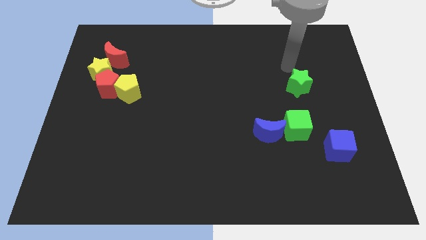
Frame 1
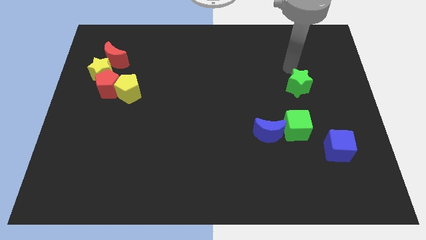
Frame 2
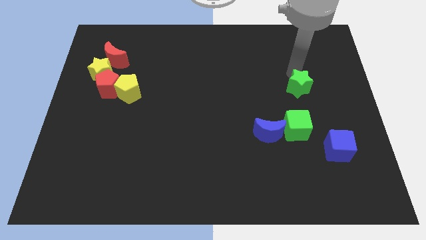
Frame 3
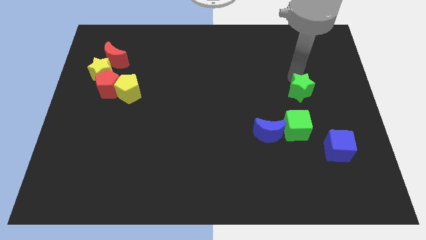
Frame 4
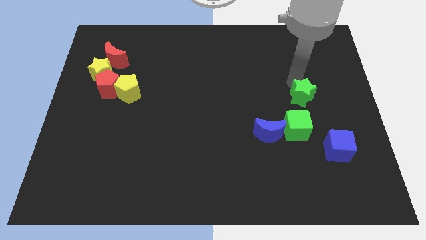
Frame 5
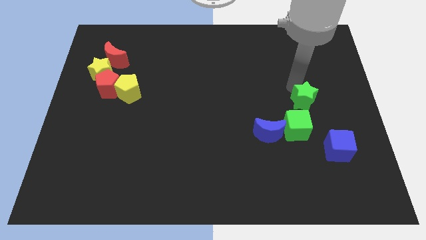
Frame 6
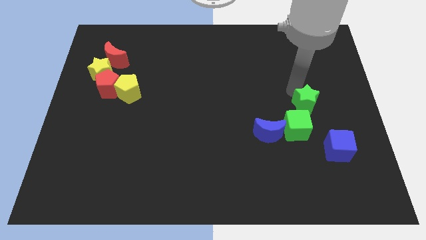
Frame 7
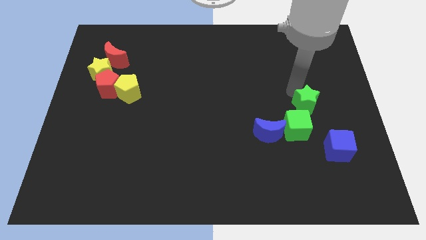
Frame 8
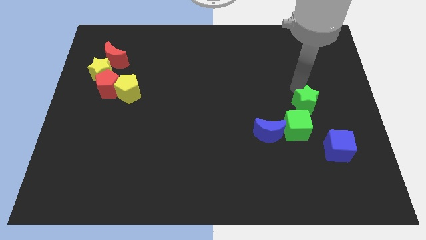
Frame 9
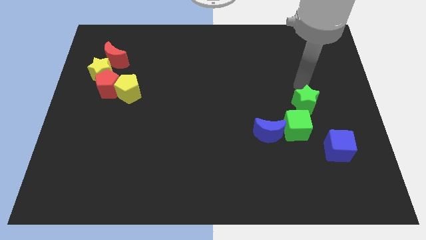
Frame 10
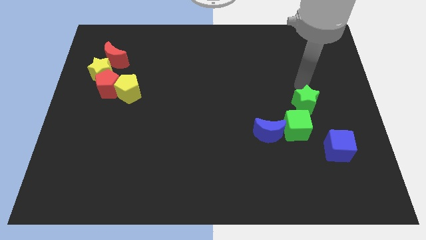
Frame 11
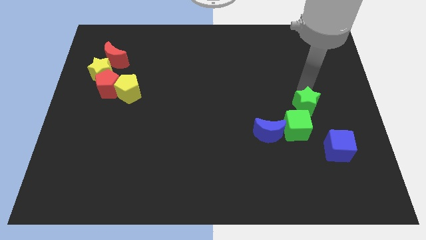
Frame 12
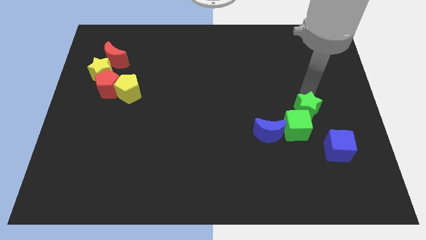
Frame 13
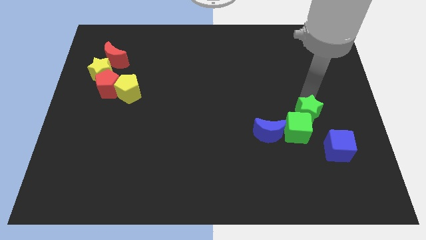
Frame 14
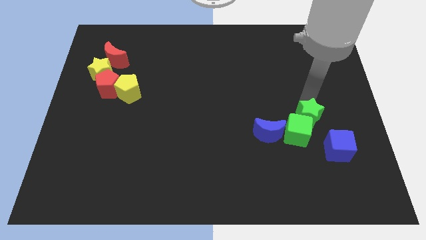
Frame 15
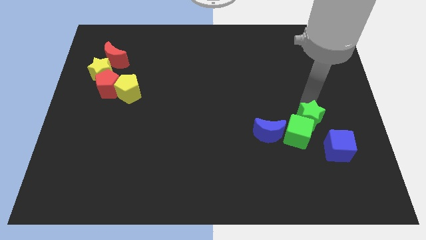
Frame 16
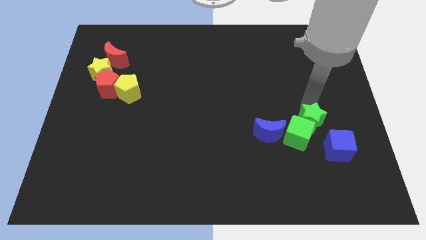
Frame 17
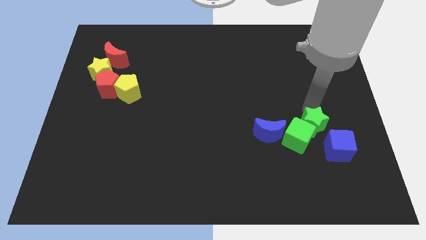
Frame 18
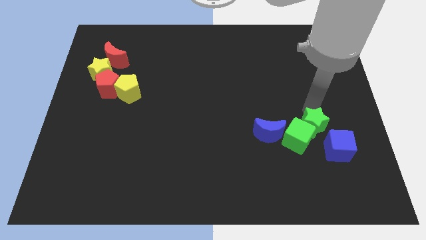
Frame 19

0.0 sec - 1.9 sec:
push the green star into the green cube

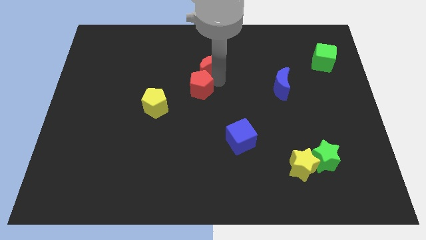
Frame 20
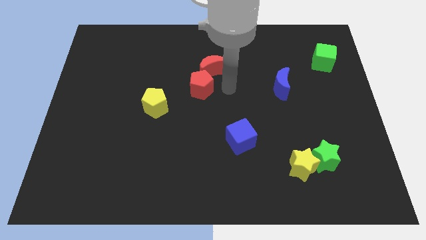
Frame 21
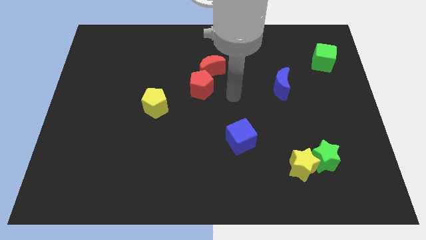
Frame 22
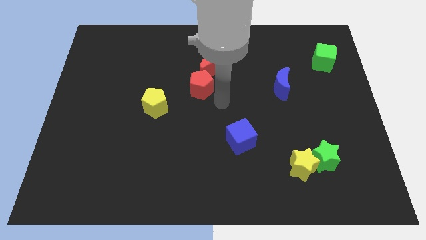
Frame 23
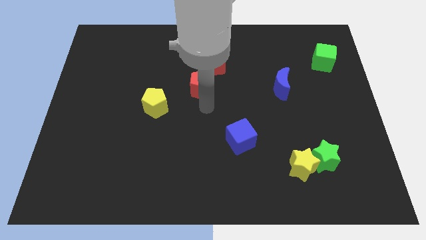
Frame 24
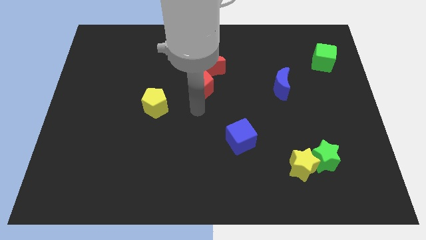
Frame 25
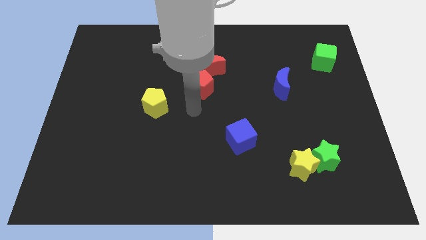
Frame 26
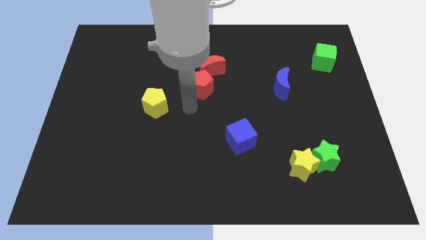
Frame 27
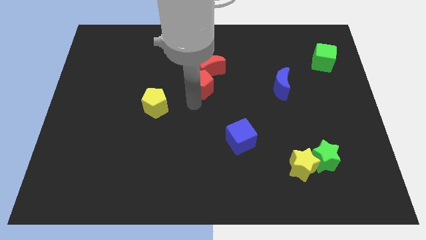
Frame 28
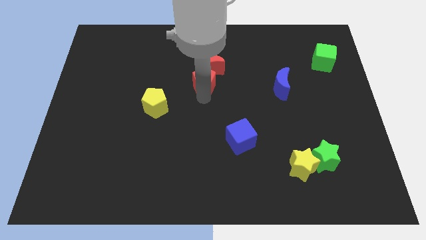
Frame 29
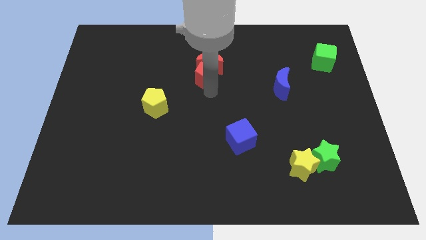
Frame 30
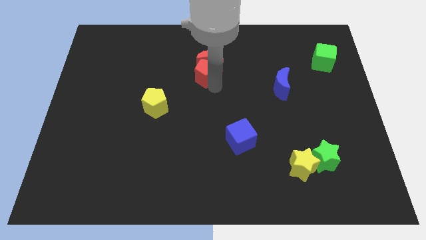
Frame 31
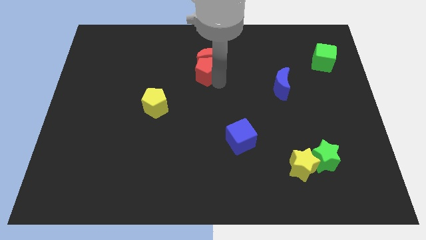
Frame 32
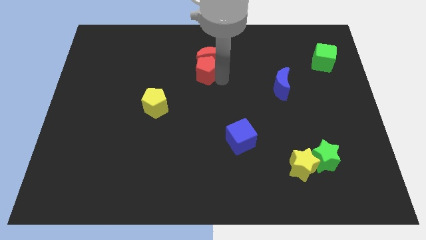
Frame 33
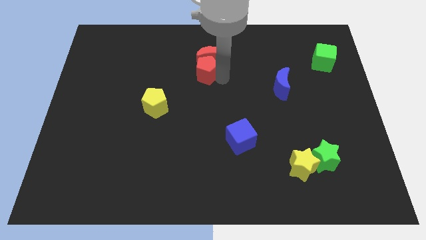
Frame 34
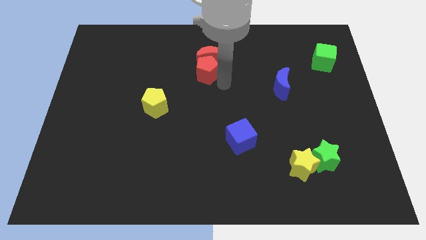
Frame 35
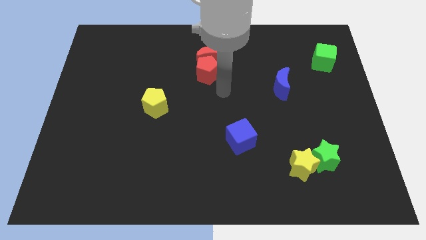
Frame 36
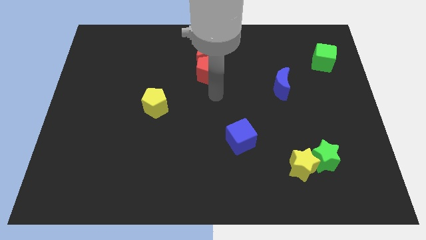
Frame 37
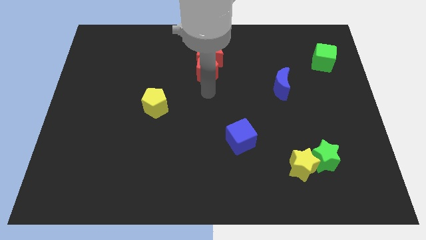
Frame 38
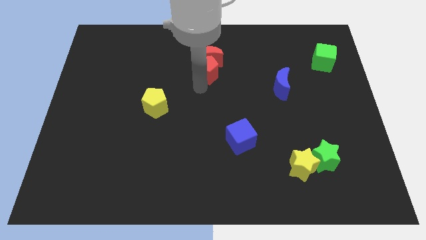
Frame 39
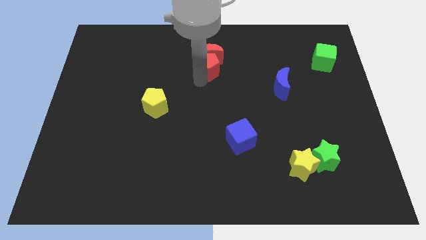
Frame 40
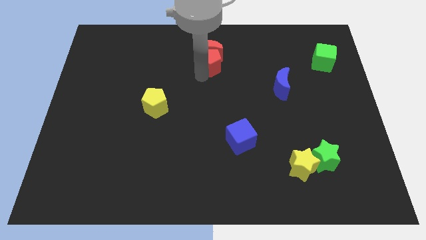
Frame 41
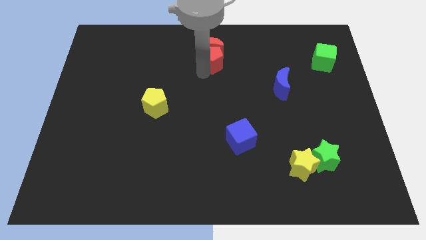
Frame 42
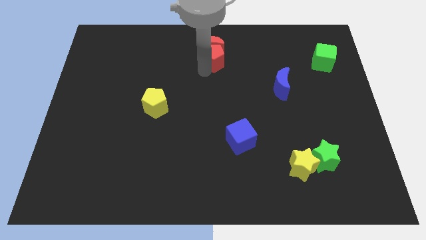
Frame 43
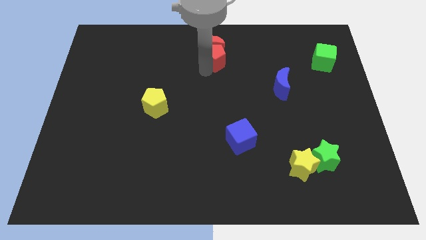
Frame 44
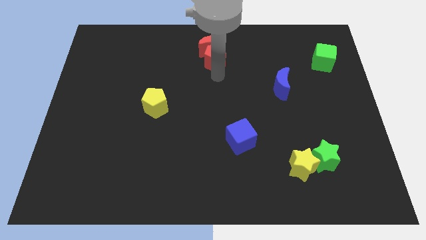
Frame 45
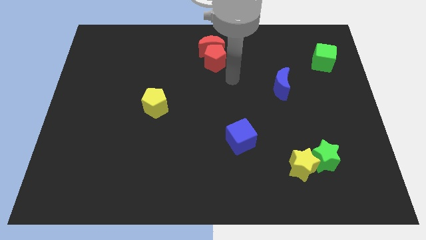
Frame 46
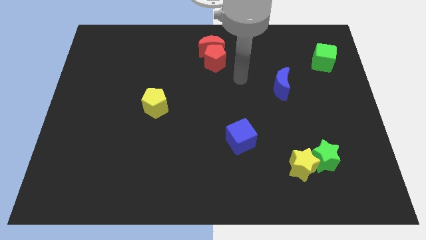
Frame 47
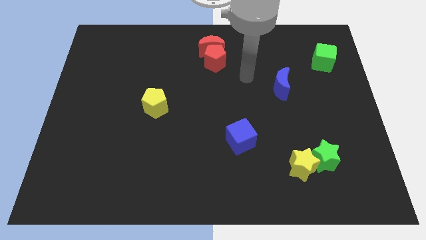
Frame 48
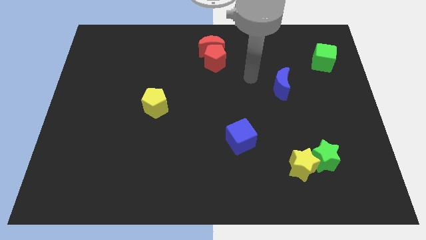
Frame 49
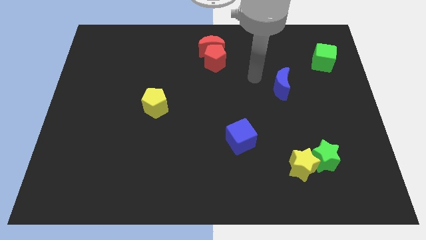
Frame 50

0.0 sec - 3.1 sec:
push red blocks towards top center

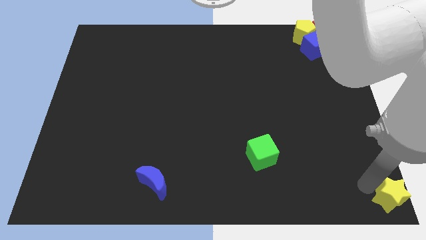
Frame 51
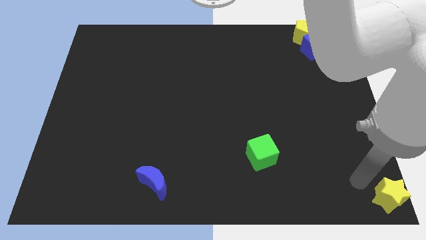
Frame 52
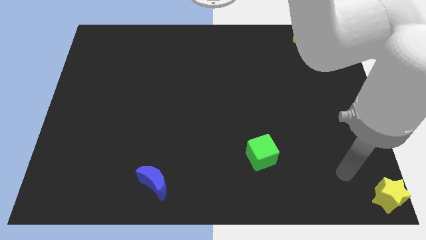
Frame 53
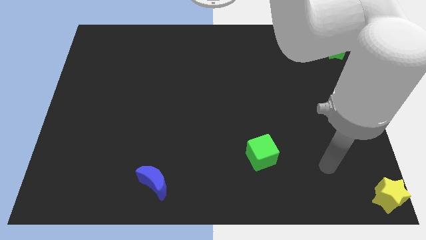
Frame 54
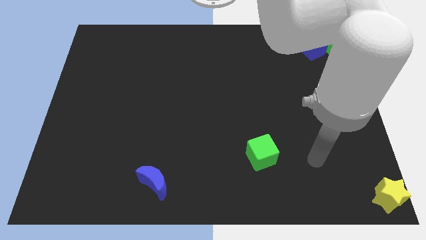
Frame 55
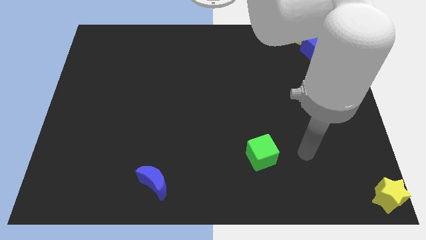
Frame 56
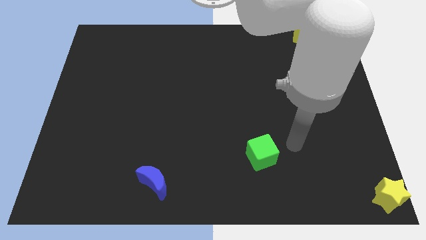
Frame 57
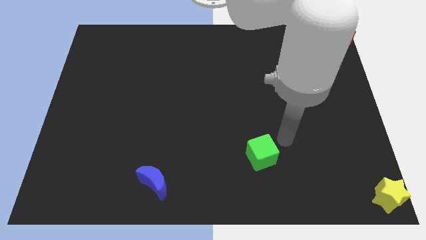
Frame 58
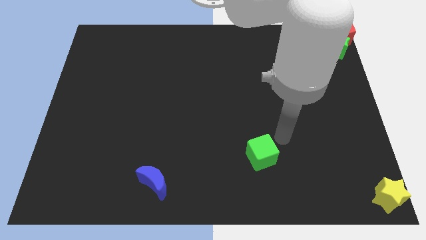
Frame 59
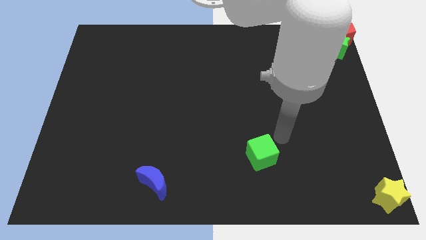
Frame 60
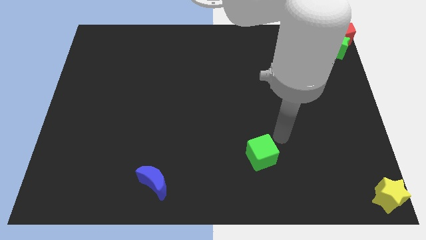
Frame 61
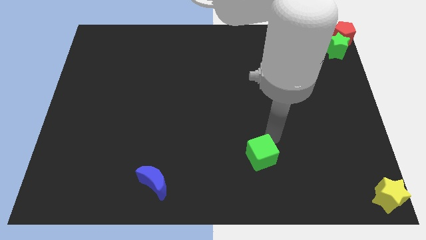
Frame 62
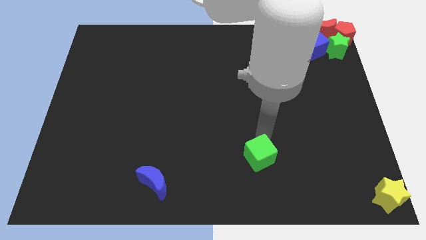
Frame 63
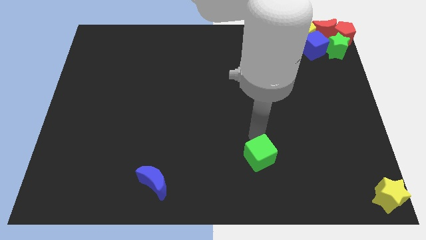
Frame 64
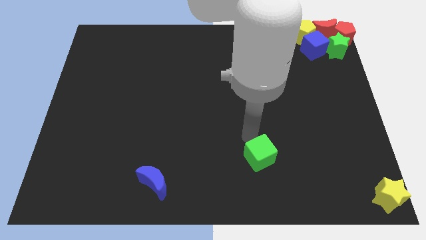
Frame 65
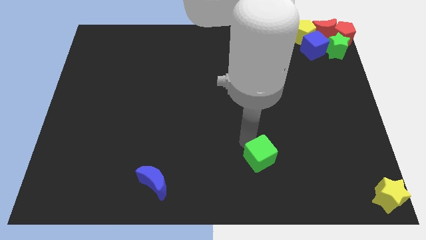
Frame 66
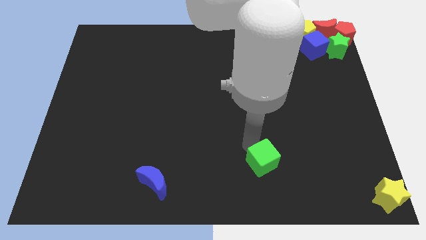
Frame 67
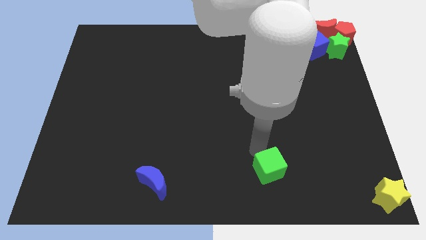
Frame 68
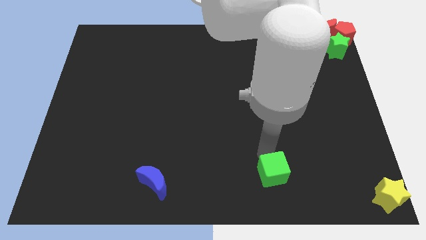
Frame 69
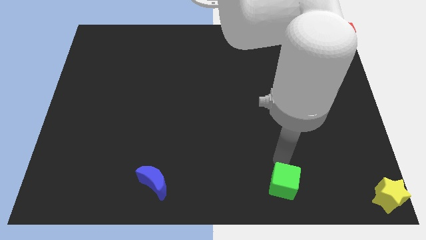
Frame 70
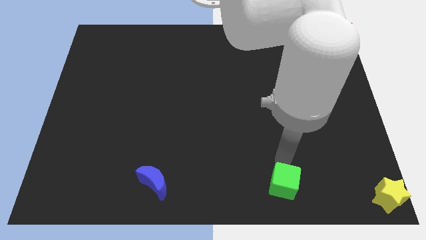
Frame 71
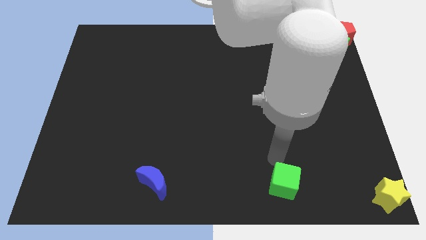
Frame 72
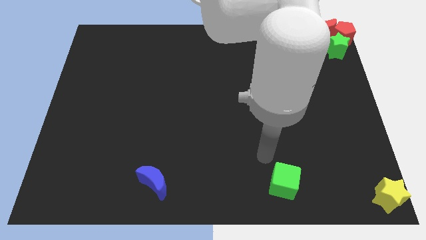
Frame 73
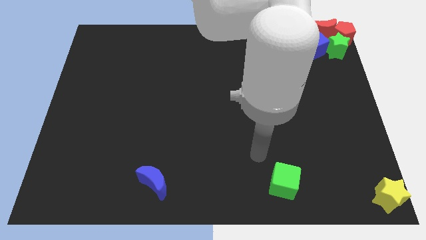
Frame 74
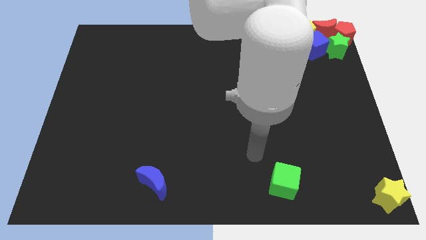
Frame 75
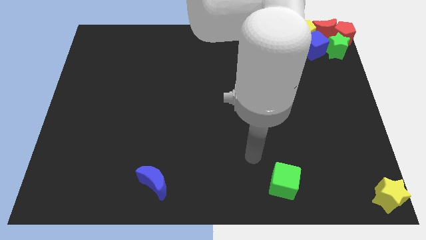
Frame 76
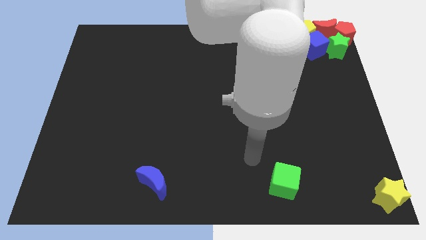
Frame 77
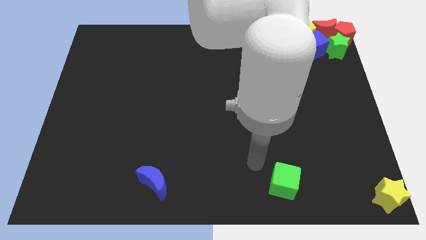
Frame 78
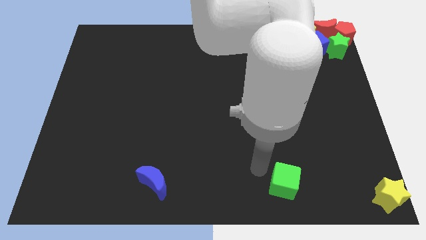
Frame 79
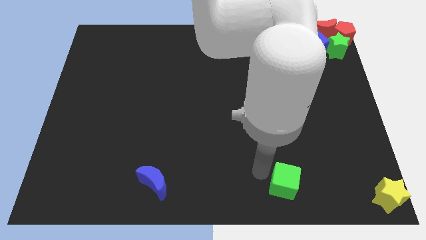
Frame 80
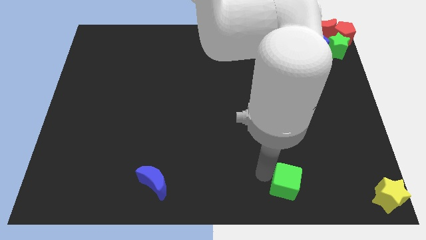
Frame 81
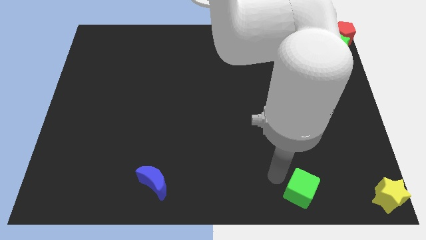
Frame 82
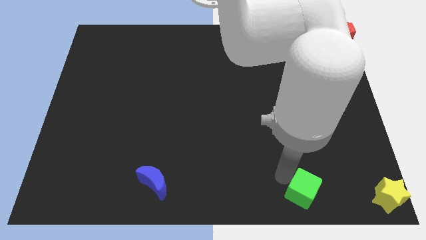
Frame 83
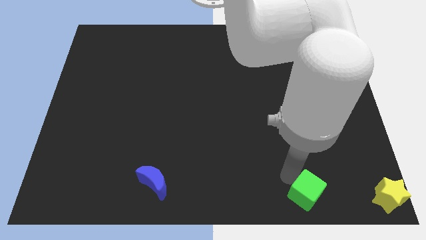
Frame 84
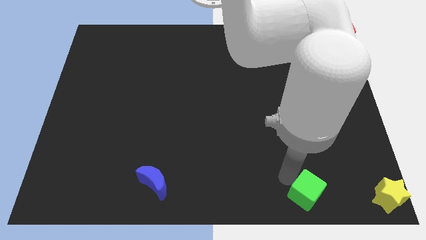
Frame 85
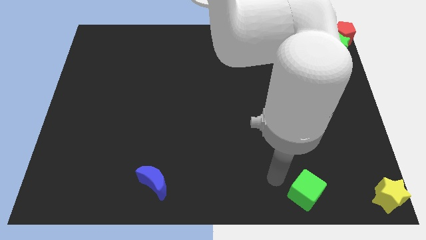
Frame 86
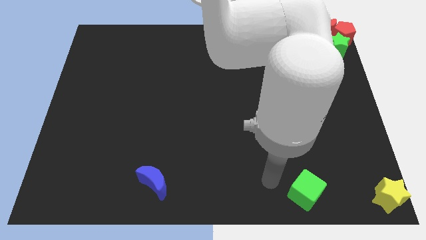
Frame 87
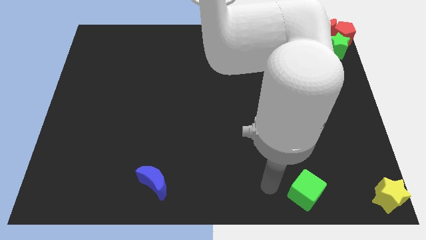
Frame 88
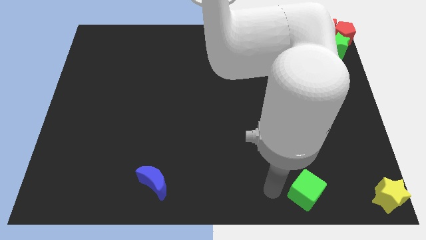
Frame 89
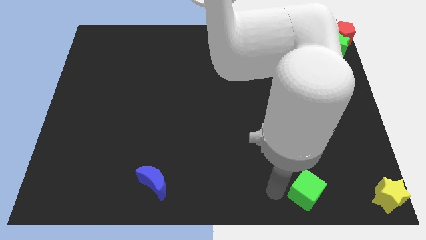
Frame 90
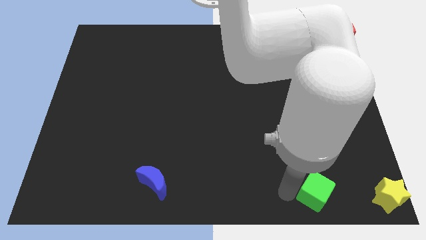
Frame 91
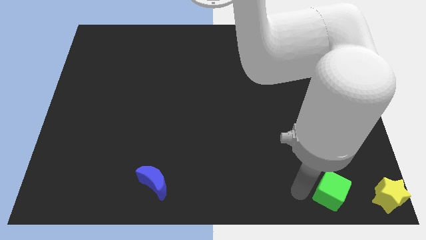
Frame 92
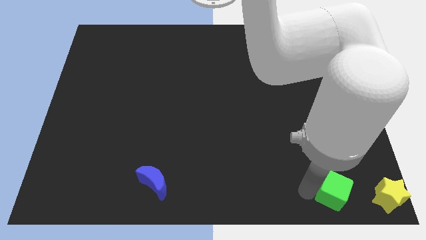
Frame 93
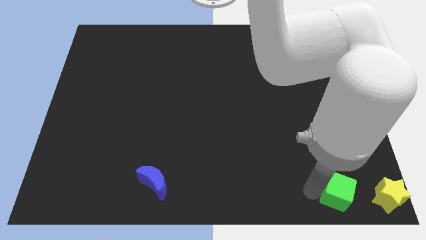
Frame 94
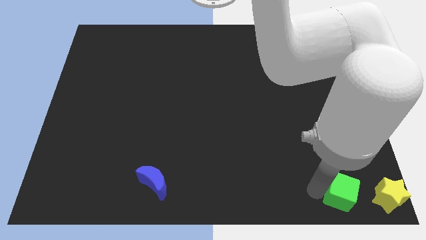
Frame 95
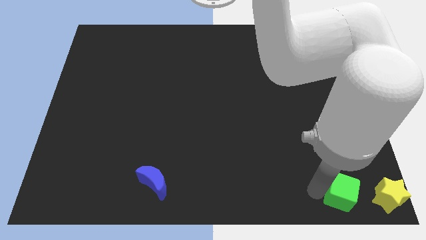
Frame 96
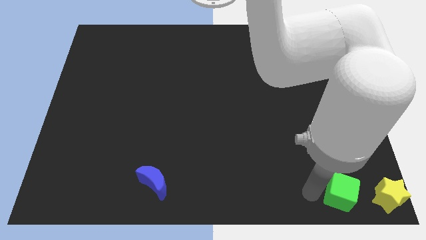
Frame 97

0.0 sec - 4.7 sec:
move the green cube close to the yellow star
